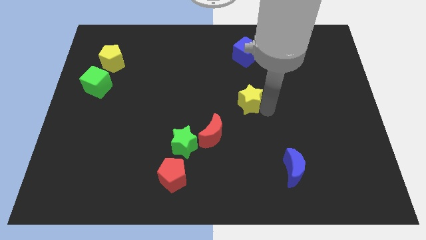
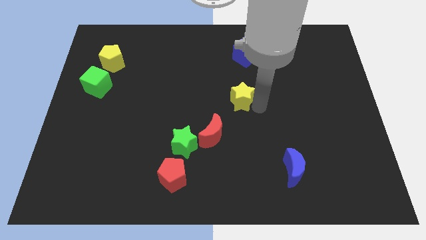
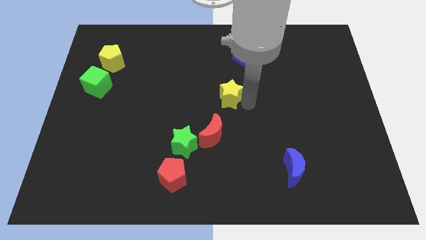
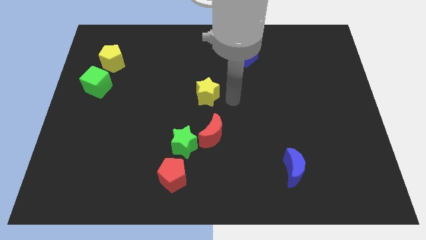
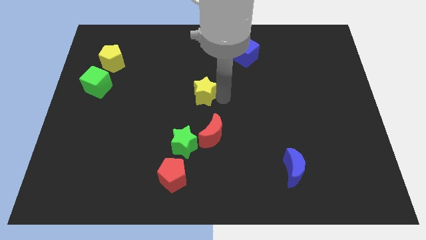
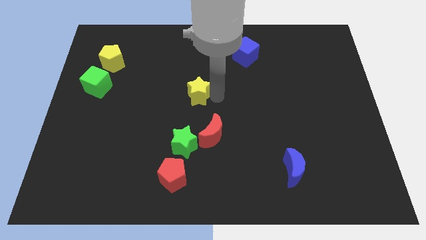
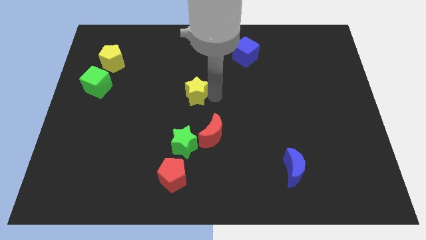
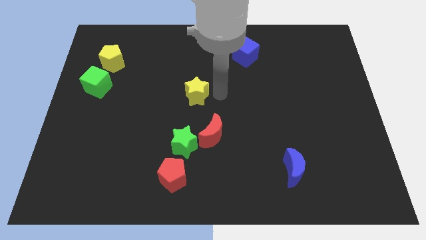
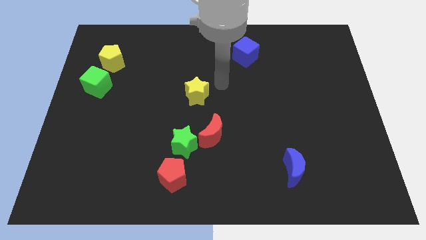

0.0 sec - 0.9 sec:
move the yellow star diagonal to the yellow pentagon

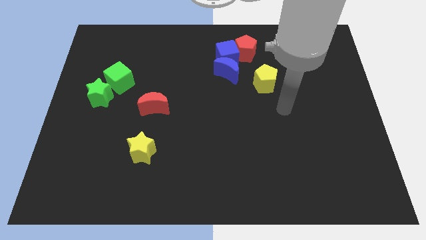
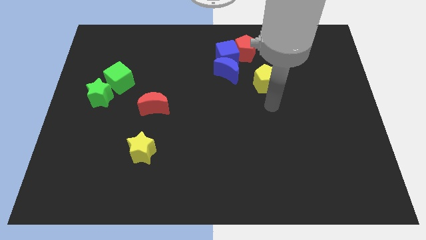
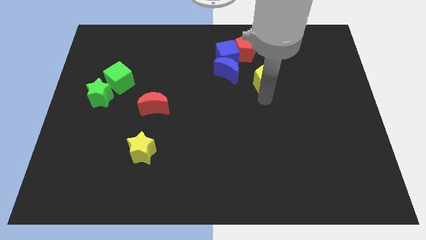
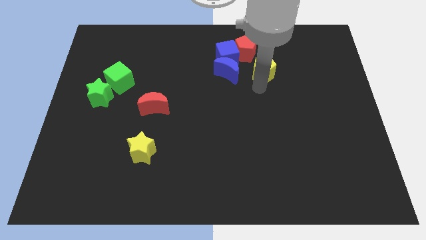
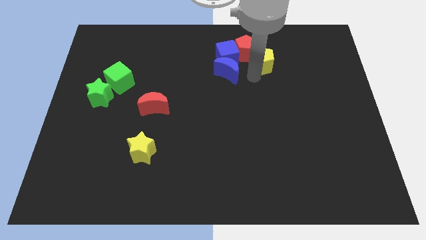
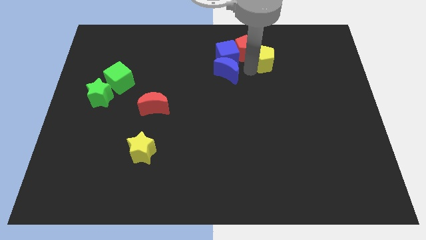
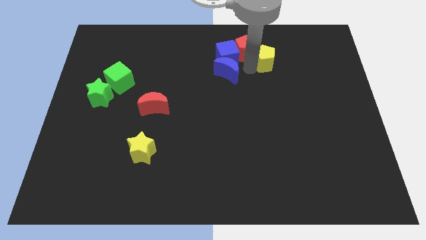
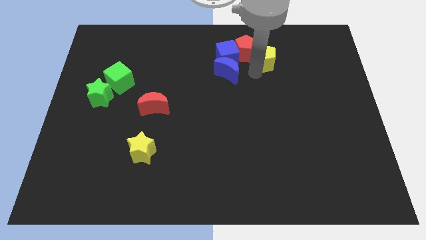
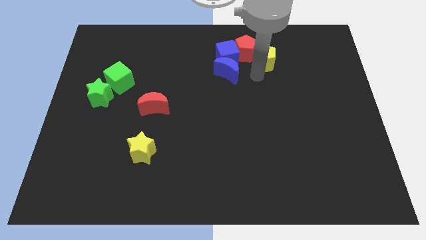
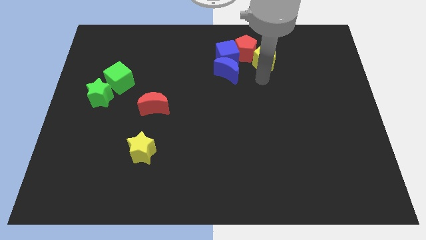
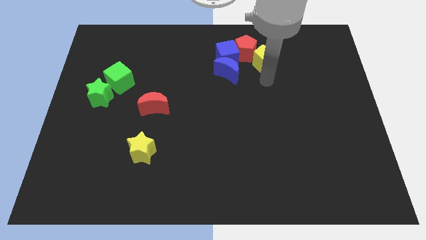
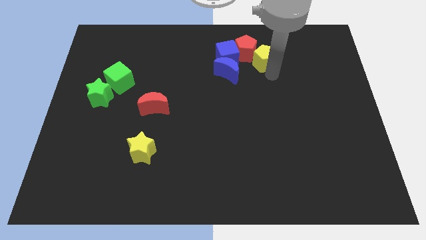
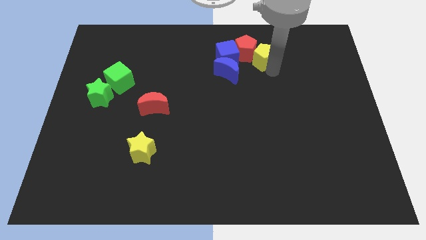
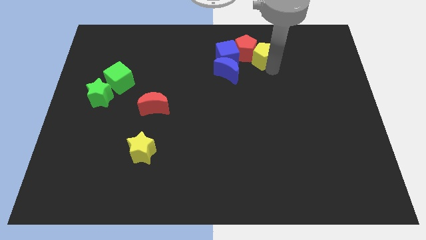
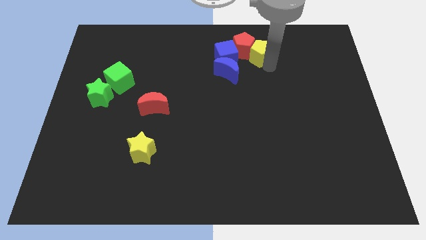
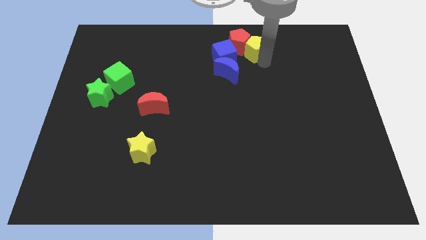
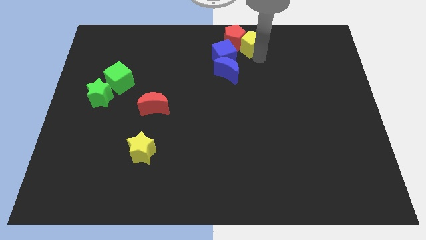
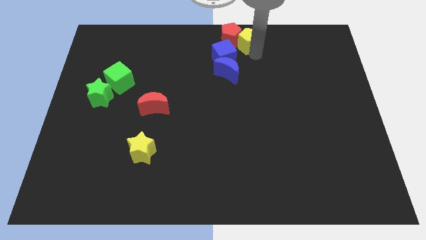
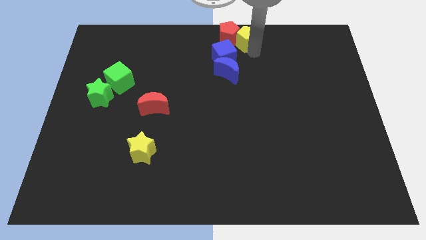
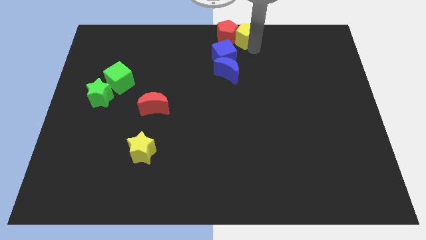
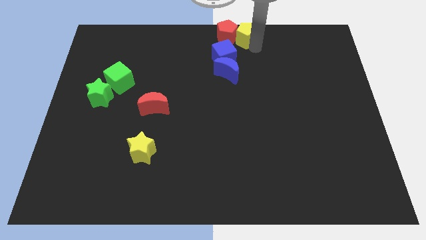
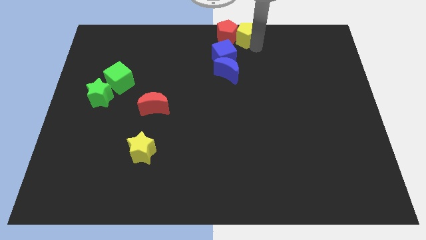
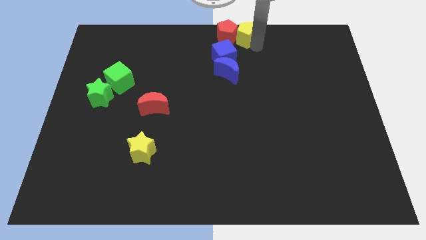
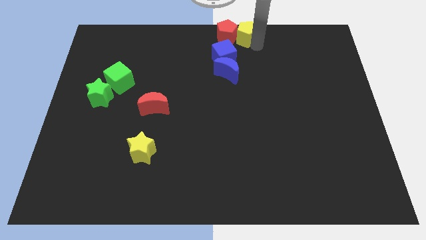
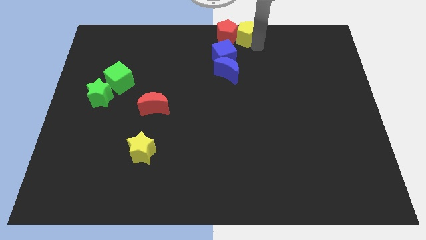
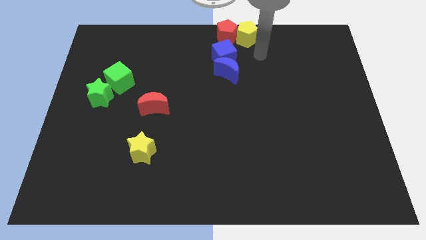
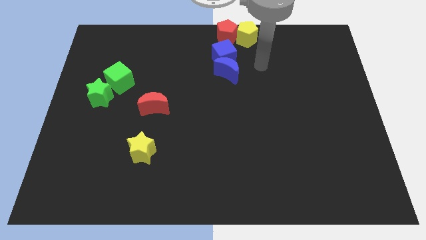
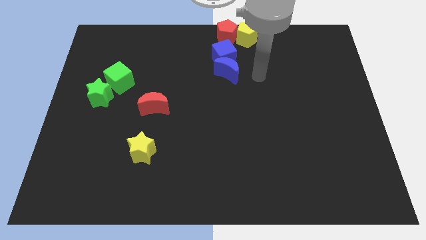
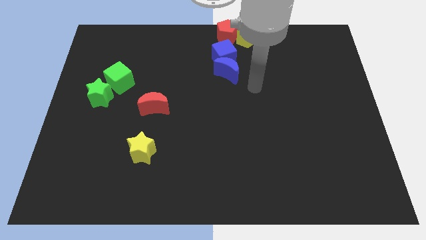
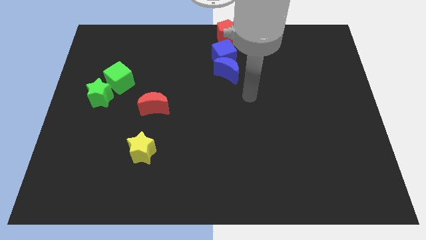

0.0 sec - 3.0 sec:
take the red pentagon and yellow pentagon to the top center of the board

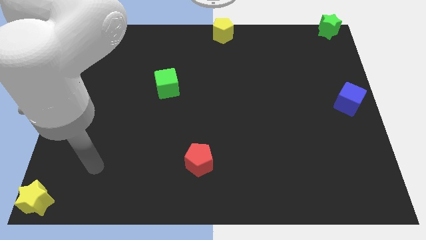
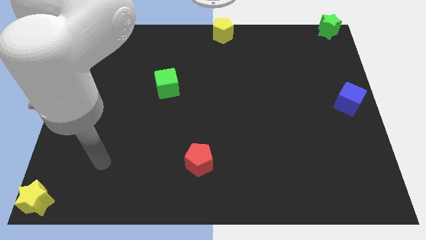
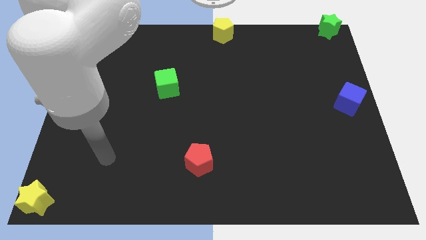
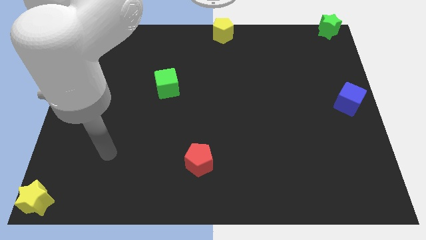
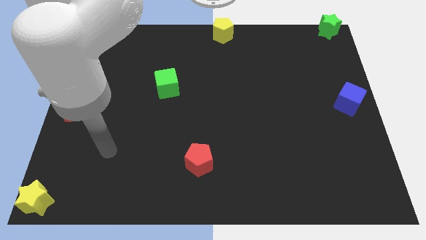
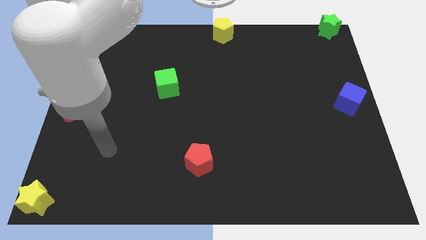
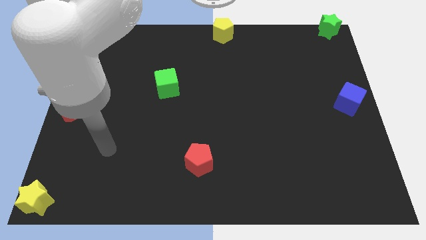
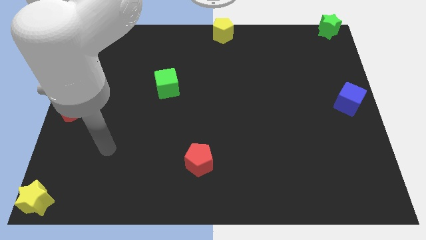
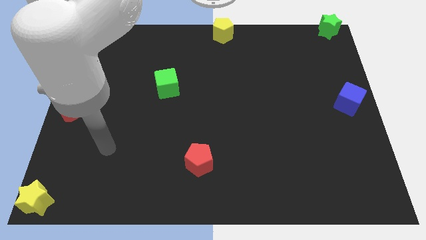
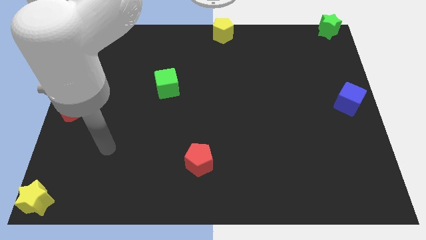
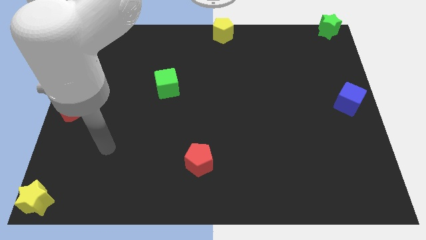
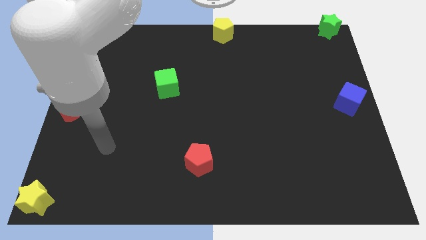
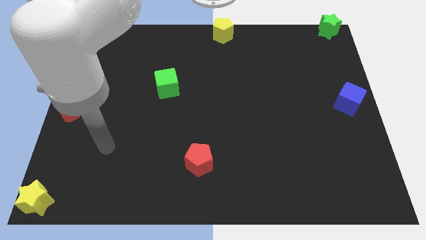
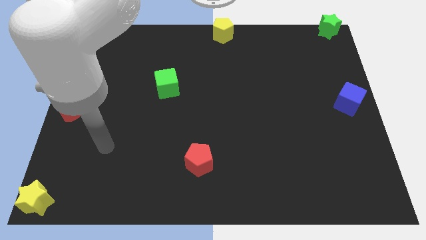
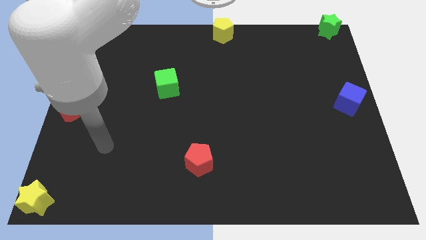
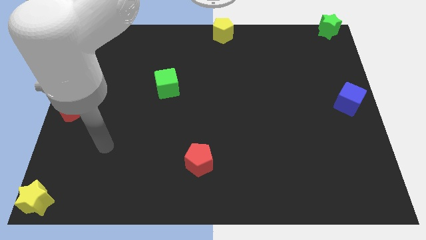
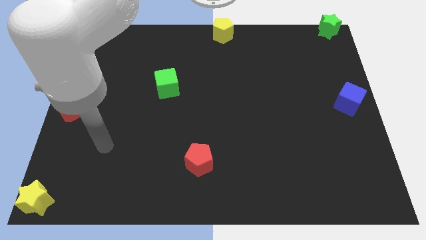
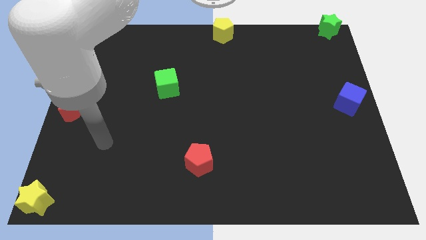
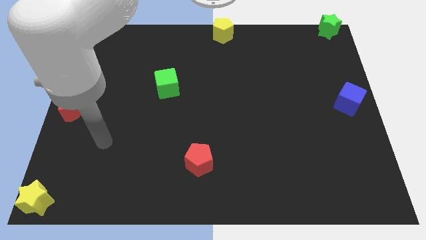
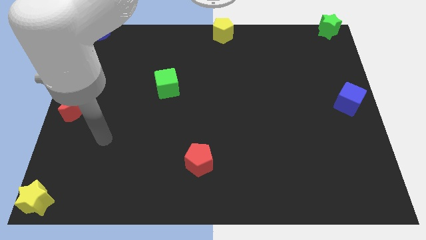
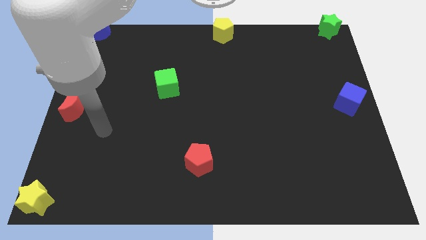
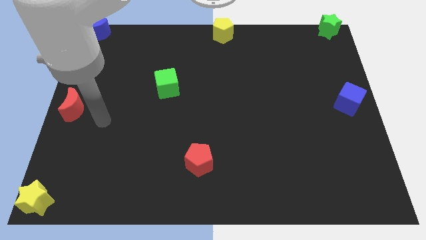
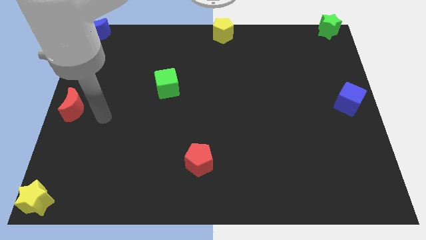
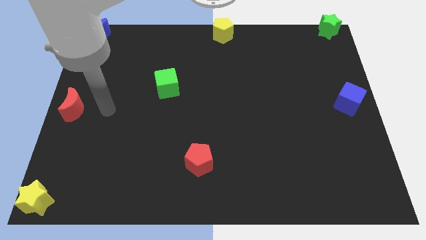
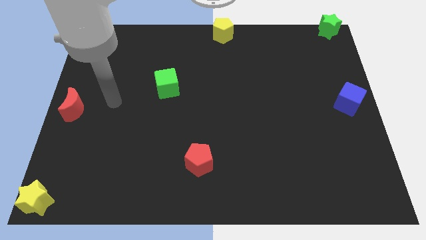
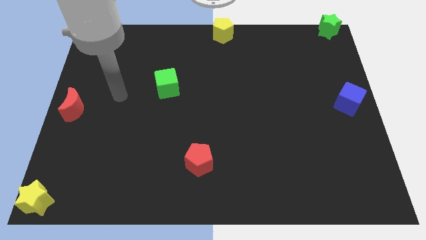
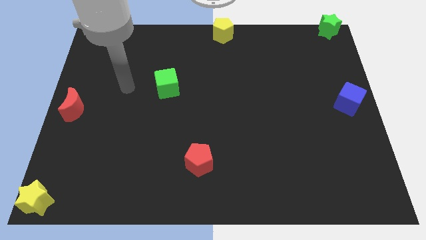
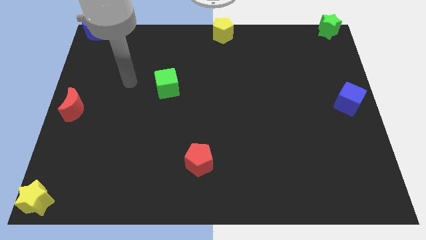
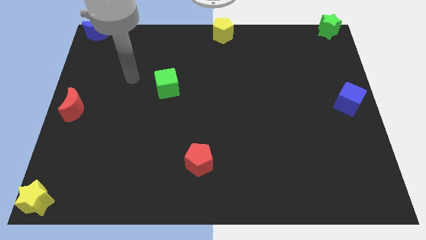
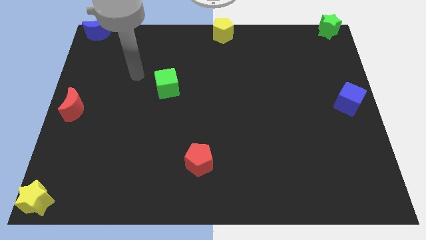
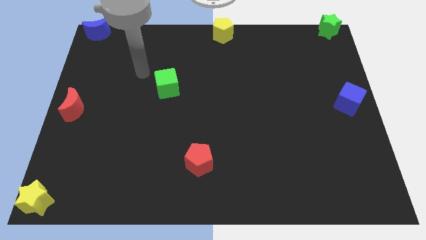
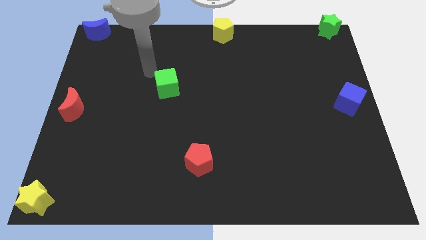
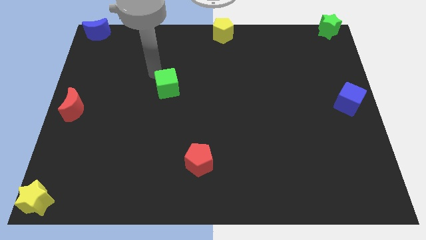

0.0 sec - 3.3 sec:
move the arm near to the green cube from top

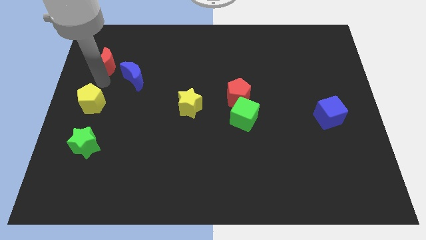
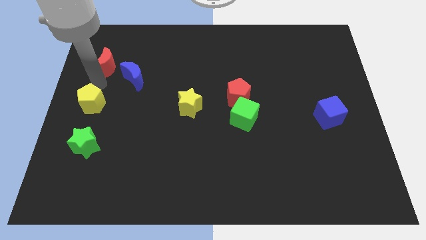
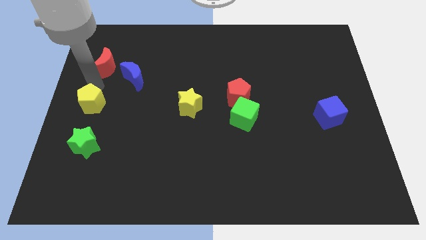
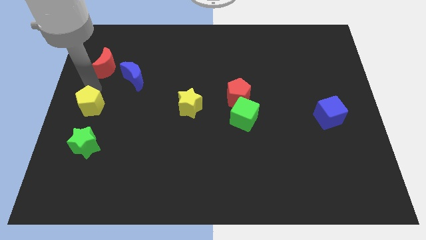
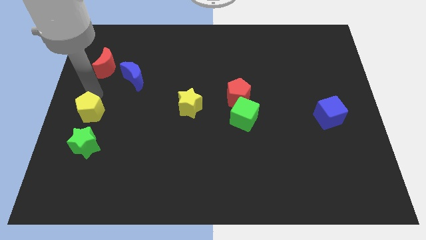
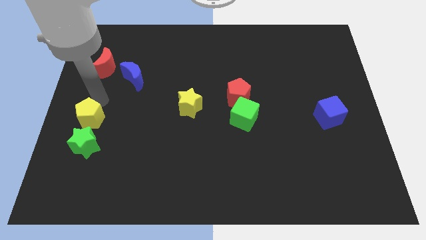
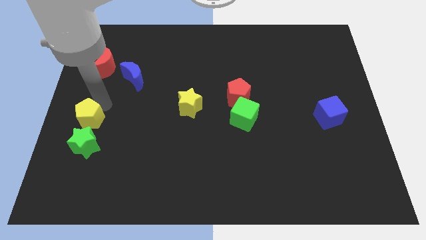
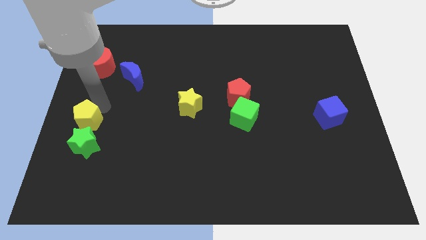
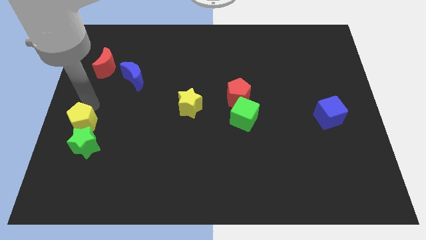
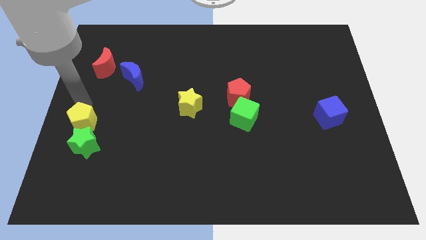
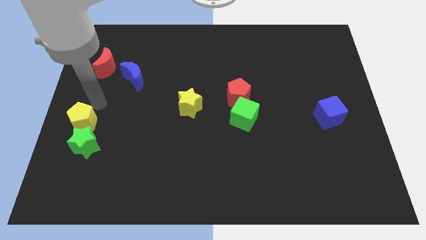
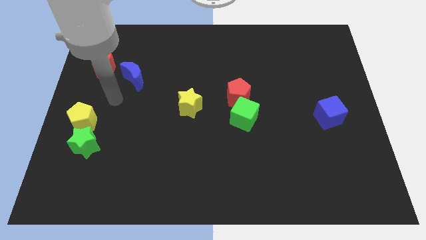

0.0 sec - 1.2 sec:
push the yellow pentagon into the green star

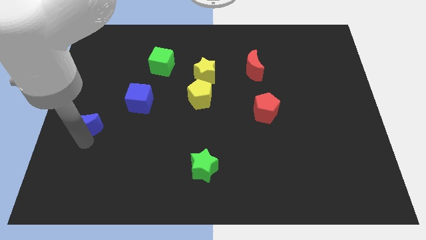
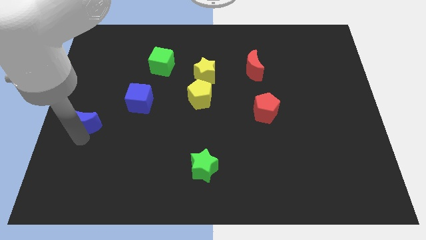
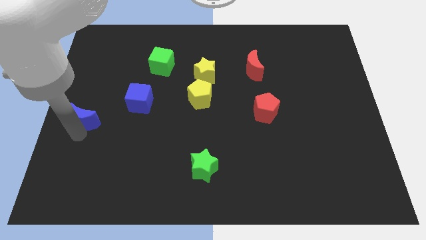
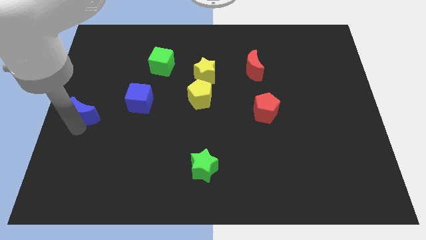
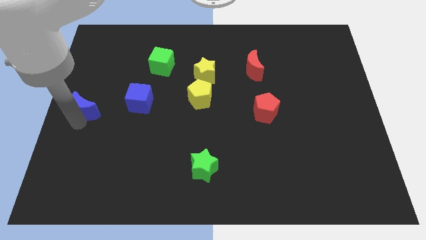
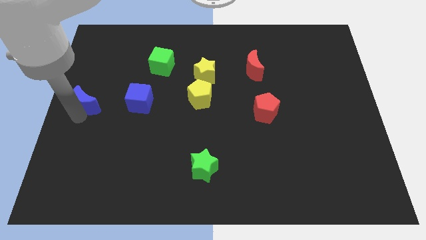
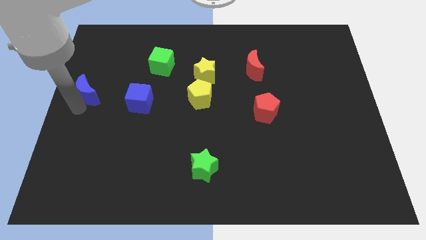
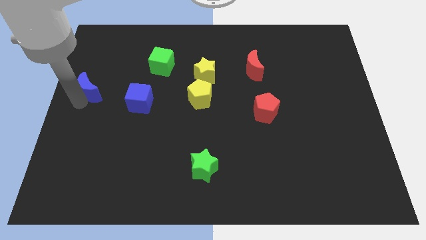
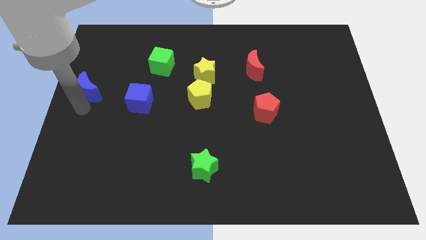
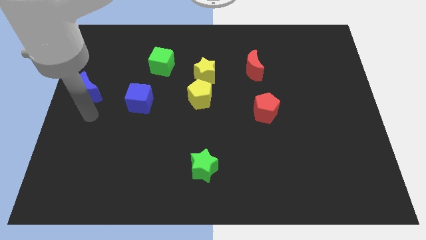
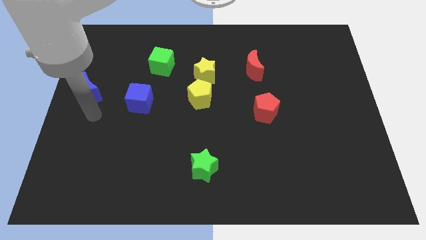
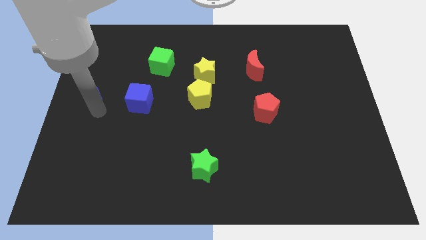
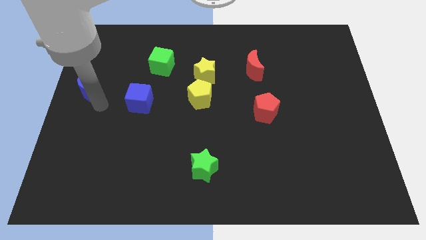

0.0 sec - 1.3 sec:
put the blue moon parallel left to the blue cube
